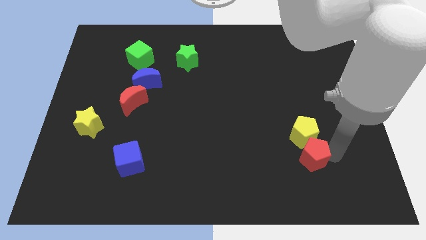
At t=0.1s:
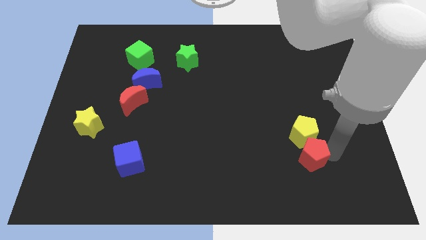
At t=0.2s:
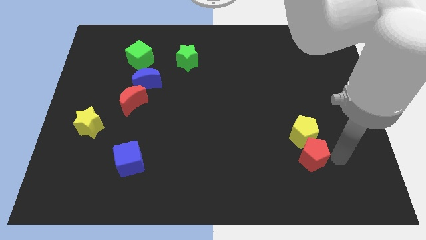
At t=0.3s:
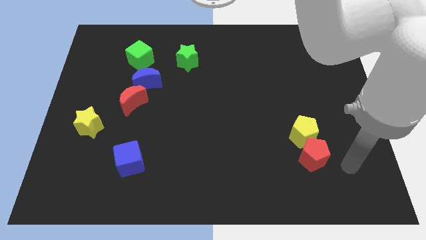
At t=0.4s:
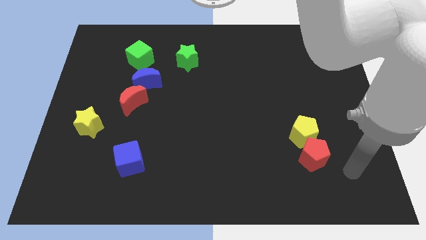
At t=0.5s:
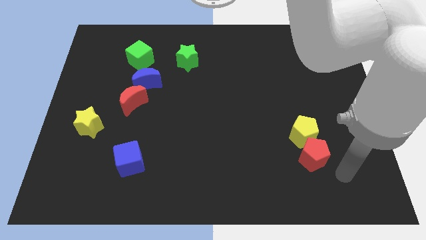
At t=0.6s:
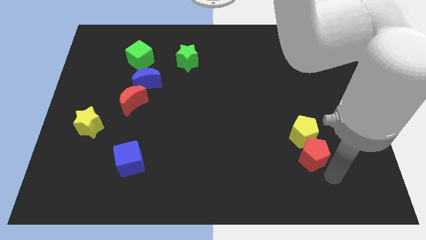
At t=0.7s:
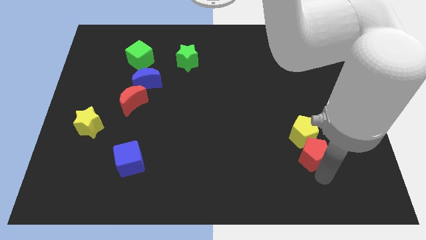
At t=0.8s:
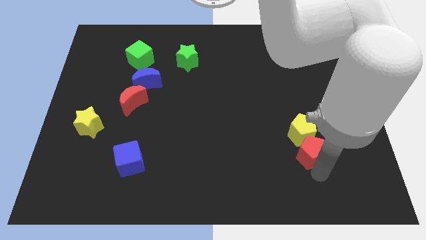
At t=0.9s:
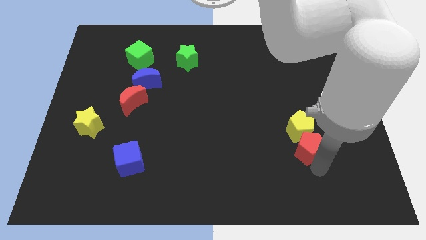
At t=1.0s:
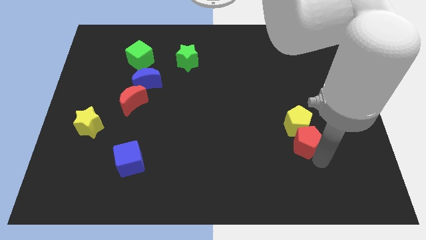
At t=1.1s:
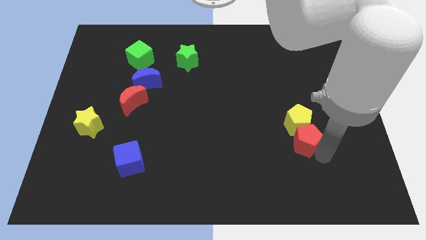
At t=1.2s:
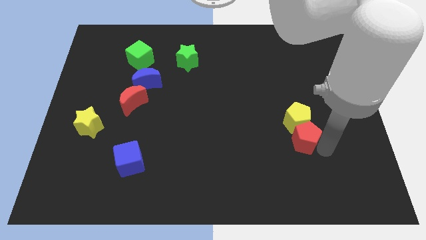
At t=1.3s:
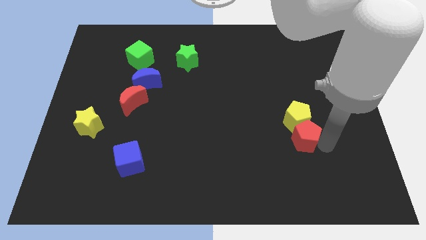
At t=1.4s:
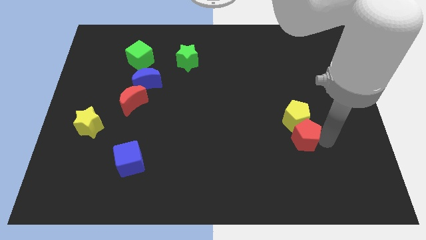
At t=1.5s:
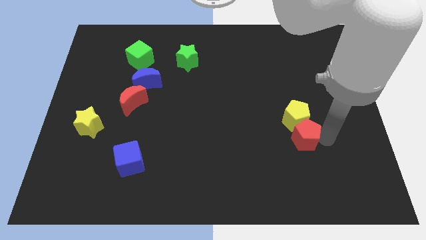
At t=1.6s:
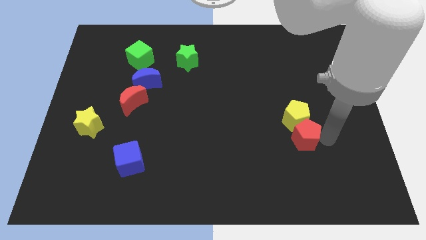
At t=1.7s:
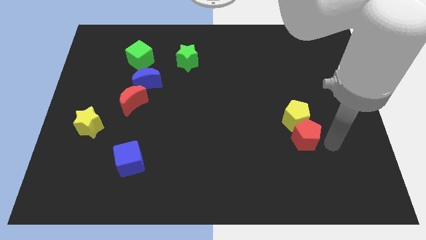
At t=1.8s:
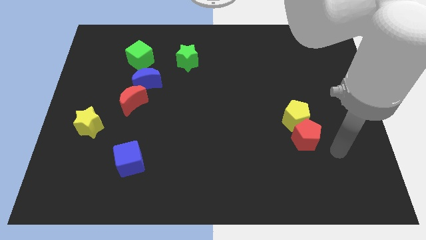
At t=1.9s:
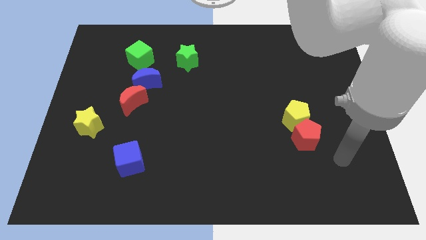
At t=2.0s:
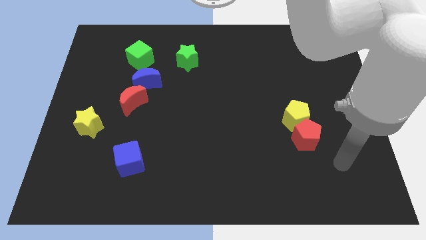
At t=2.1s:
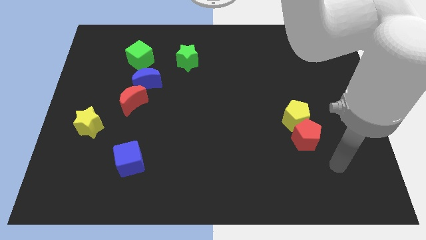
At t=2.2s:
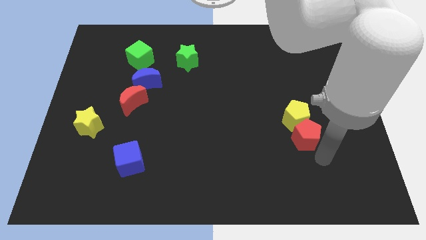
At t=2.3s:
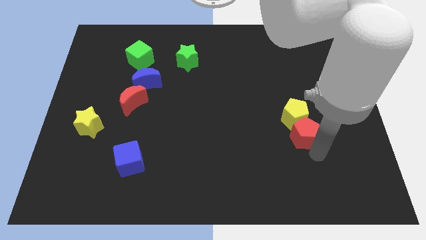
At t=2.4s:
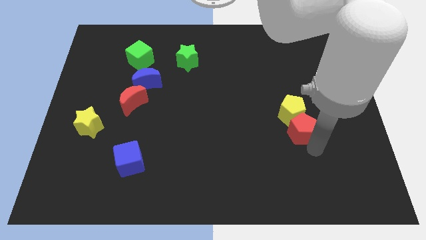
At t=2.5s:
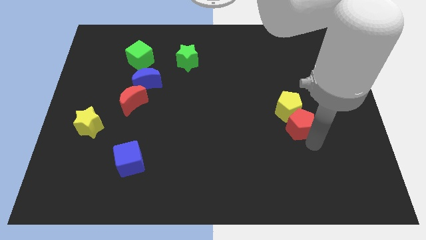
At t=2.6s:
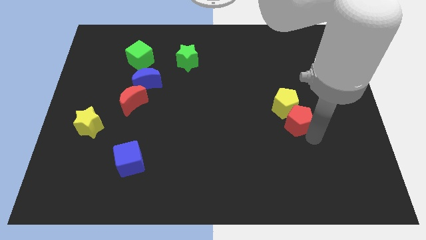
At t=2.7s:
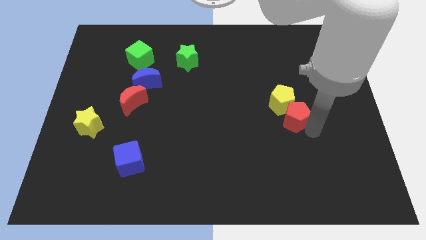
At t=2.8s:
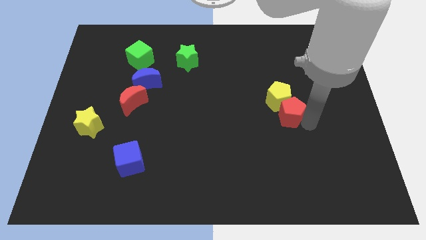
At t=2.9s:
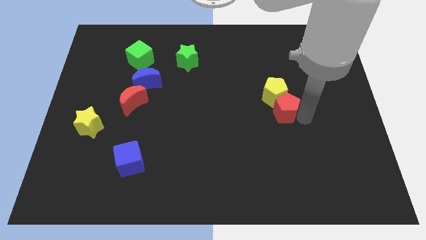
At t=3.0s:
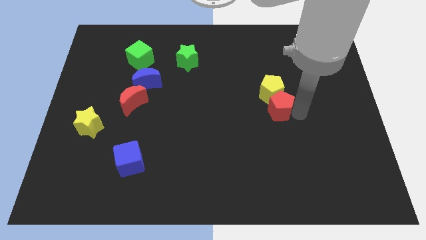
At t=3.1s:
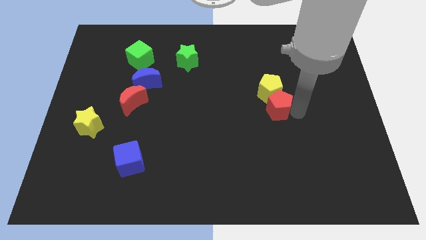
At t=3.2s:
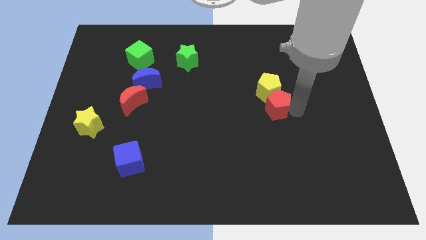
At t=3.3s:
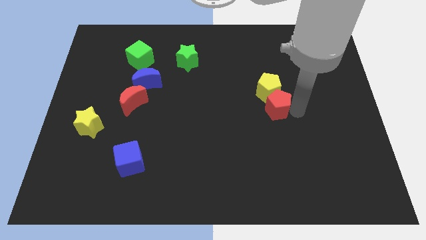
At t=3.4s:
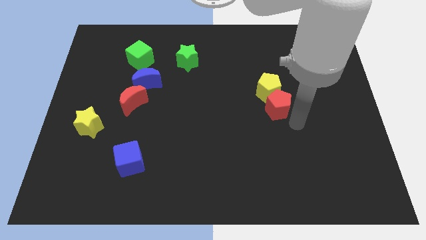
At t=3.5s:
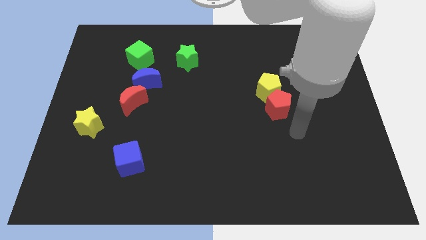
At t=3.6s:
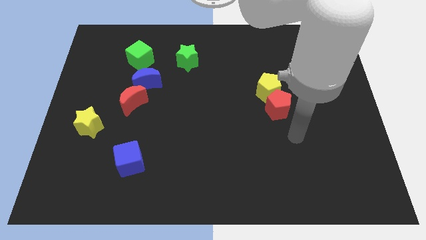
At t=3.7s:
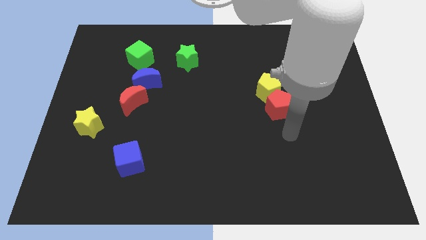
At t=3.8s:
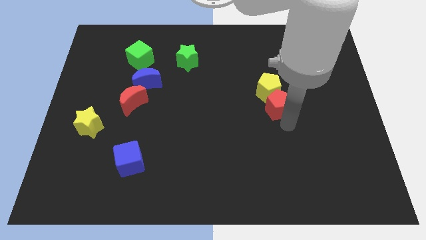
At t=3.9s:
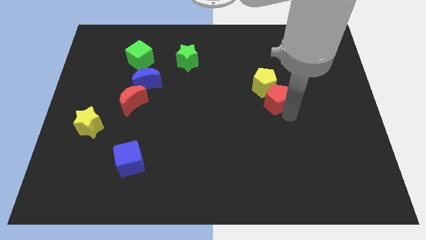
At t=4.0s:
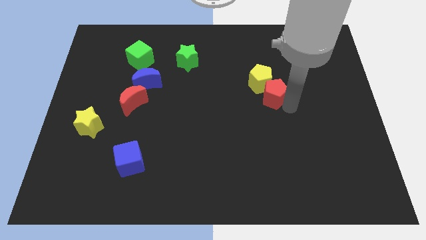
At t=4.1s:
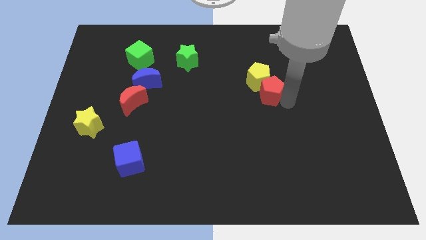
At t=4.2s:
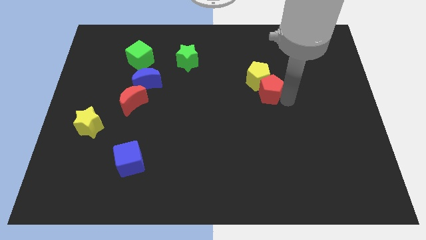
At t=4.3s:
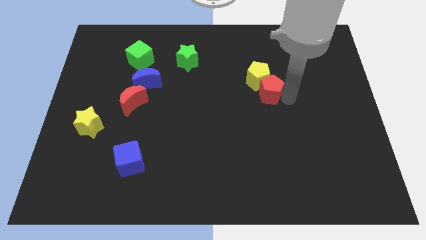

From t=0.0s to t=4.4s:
drag the red pentagon along with the yellow pentagon towards the top center

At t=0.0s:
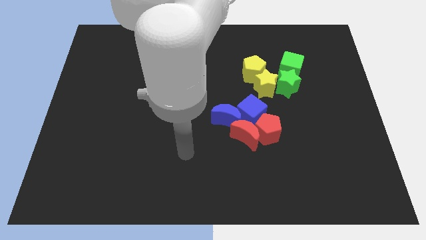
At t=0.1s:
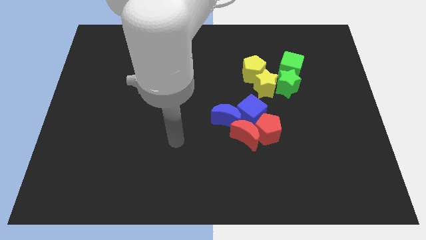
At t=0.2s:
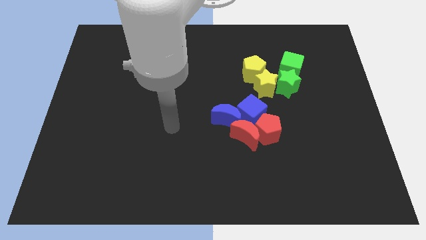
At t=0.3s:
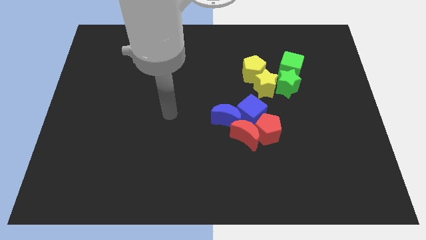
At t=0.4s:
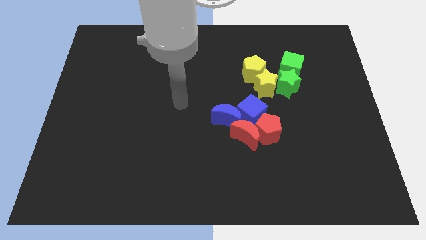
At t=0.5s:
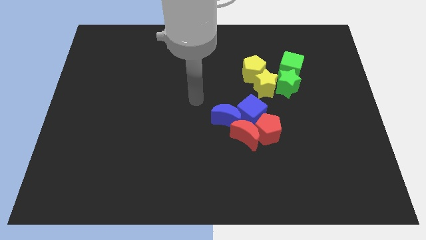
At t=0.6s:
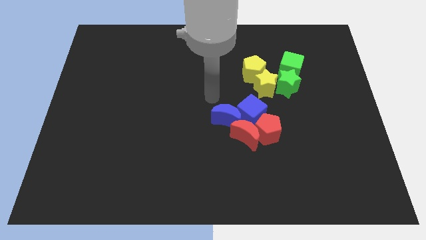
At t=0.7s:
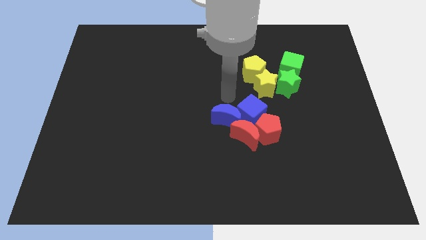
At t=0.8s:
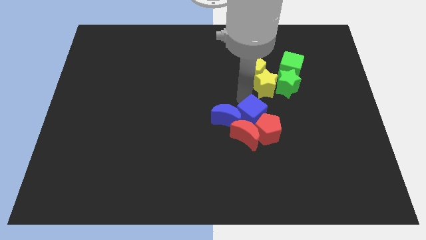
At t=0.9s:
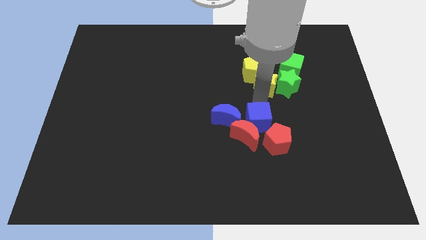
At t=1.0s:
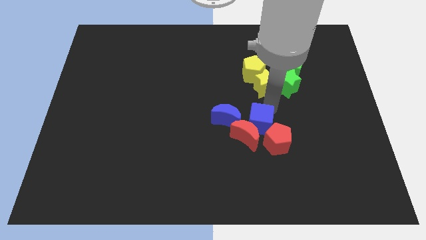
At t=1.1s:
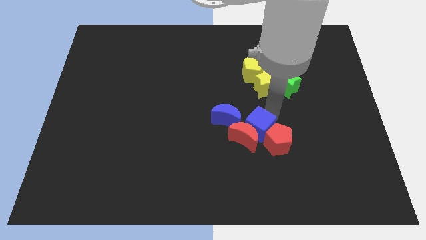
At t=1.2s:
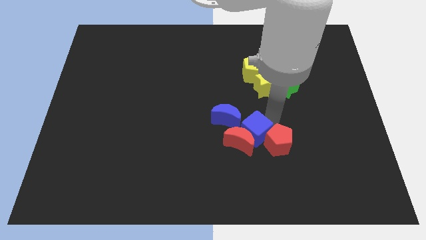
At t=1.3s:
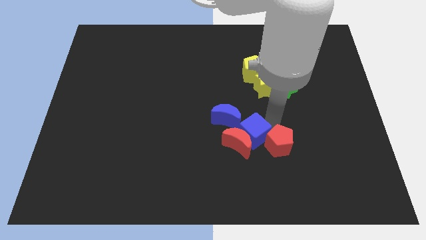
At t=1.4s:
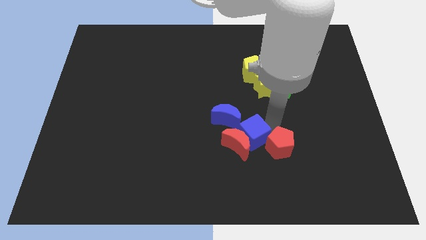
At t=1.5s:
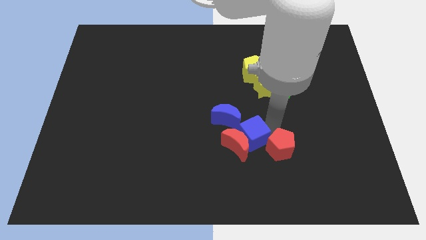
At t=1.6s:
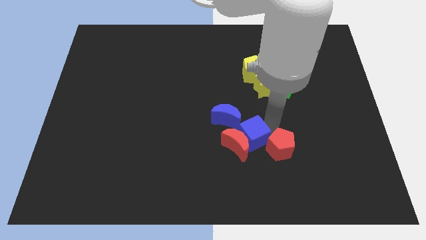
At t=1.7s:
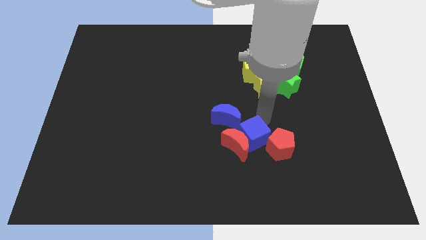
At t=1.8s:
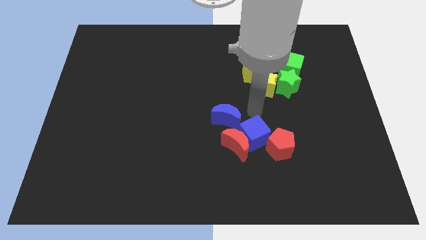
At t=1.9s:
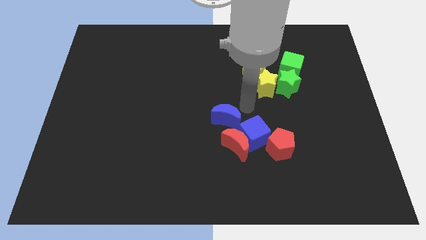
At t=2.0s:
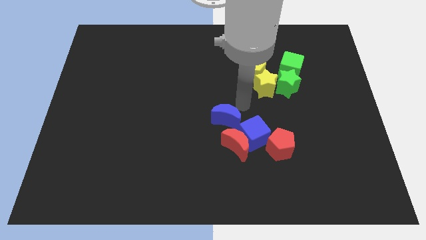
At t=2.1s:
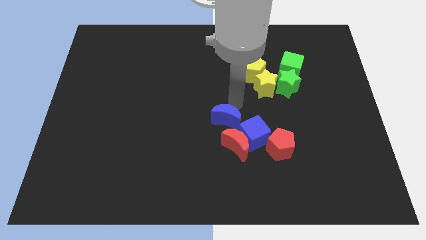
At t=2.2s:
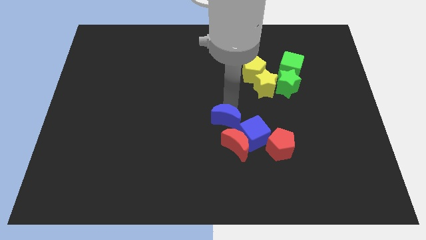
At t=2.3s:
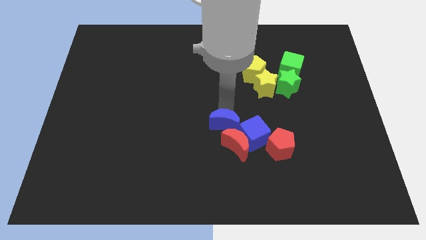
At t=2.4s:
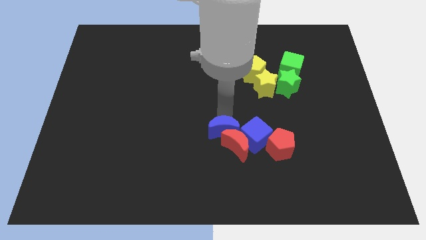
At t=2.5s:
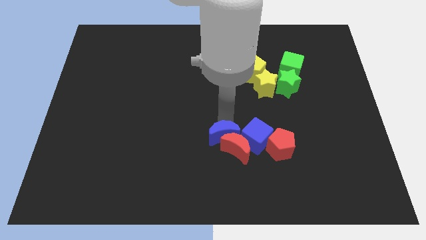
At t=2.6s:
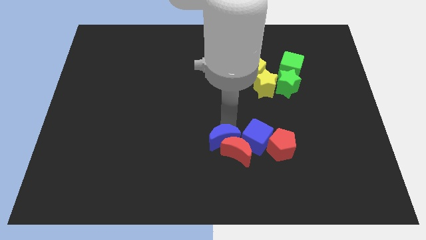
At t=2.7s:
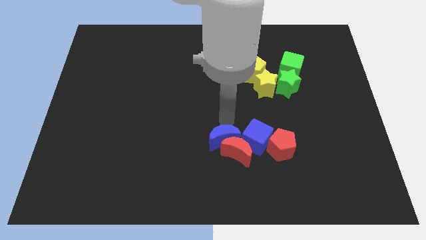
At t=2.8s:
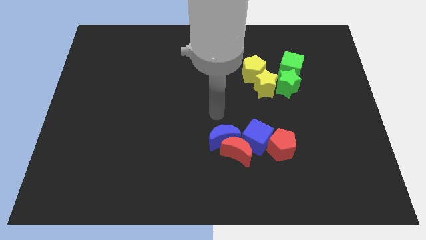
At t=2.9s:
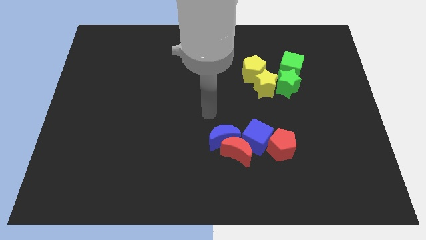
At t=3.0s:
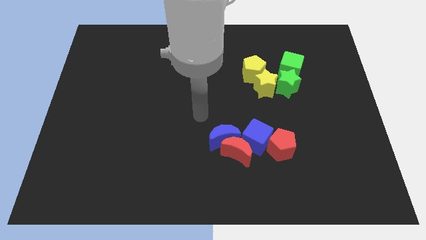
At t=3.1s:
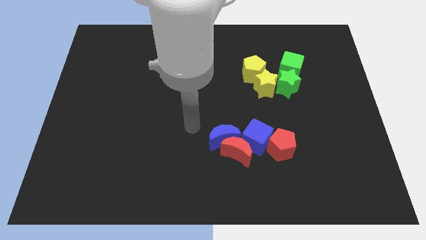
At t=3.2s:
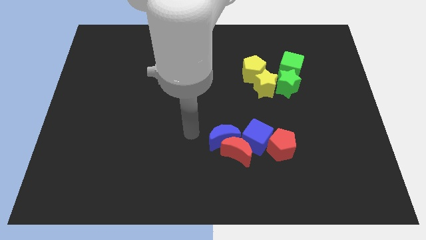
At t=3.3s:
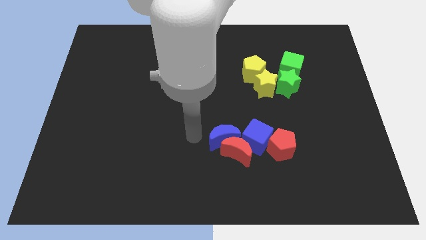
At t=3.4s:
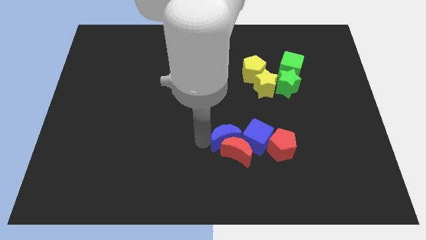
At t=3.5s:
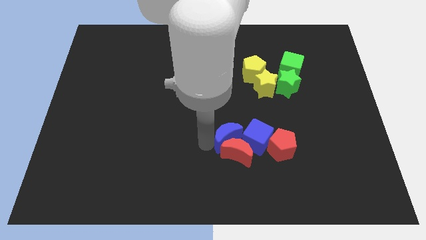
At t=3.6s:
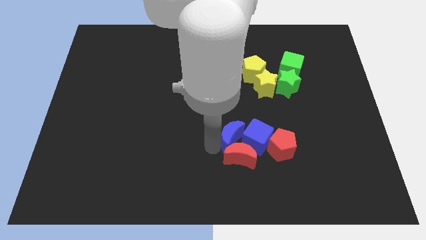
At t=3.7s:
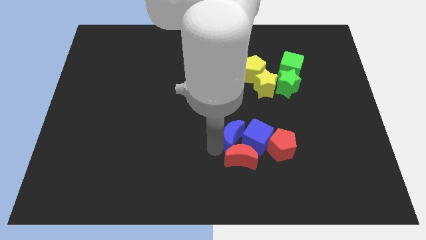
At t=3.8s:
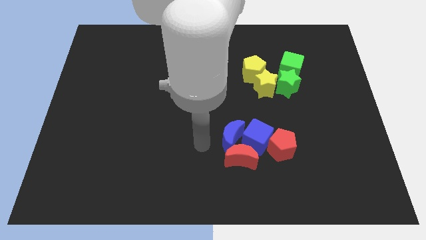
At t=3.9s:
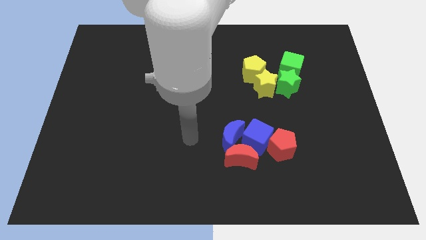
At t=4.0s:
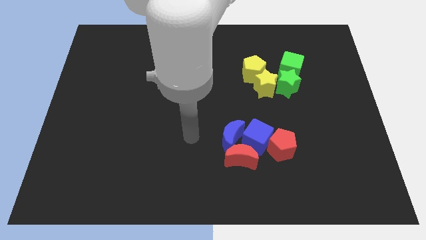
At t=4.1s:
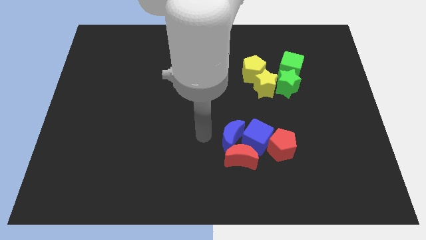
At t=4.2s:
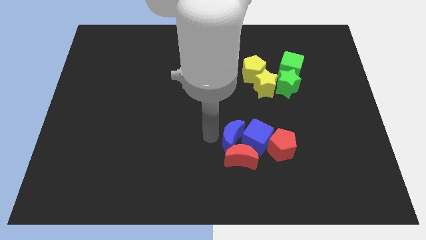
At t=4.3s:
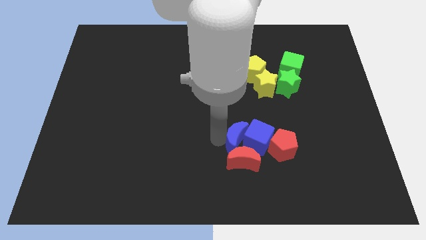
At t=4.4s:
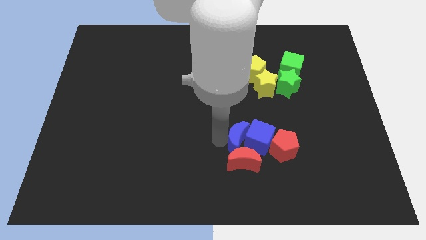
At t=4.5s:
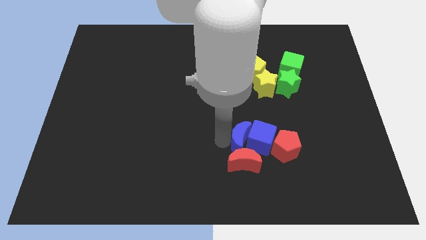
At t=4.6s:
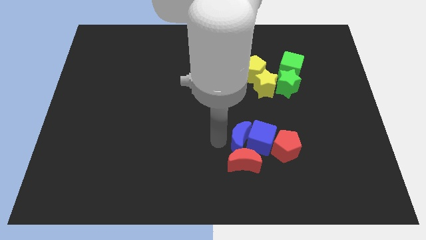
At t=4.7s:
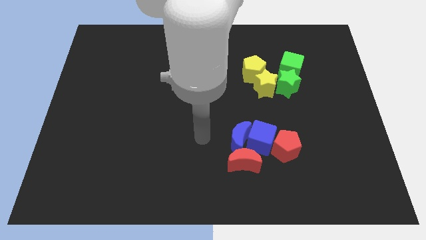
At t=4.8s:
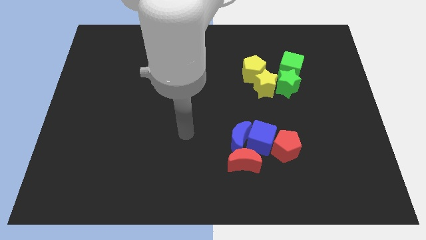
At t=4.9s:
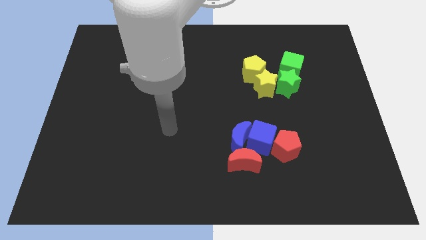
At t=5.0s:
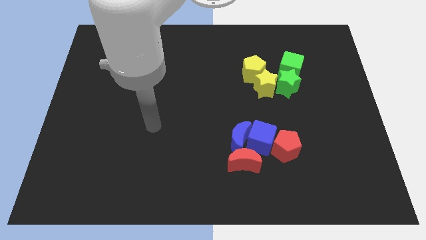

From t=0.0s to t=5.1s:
slide the blue and red blocks towards bottom
